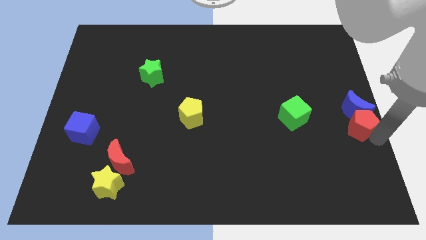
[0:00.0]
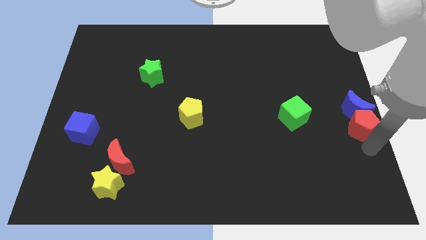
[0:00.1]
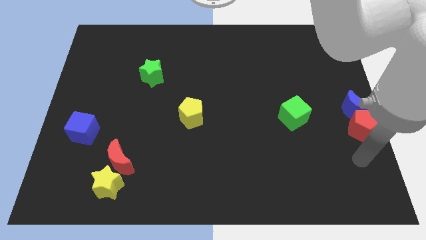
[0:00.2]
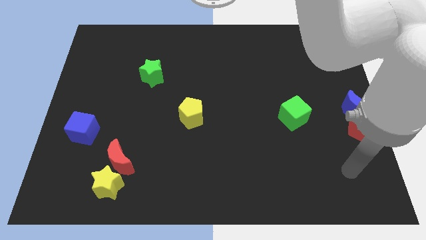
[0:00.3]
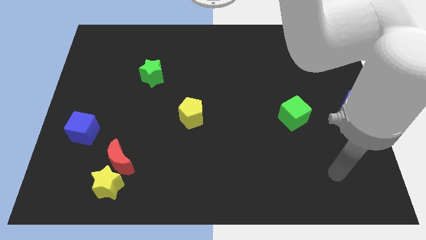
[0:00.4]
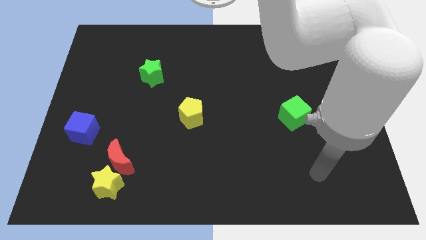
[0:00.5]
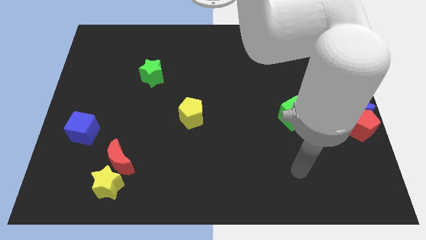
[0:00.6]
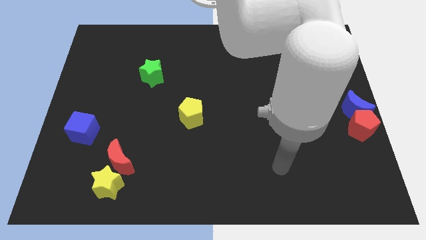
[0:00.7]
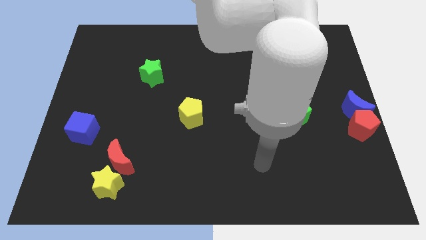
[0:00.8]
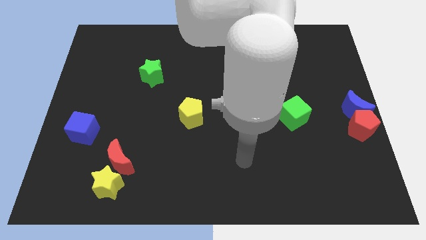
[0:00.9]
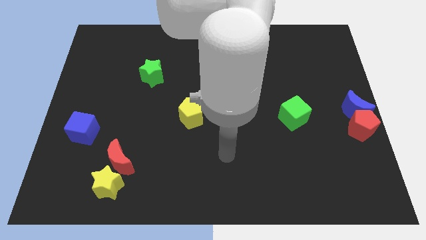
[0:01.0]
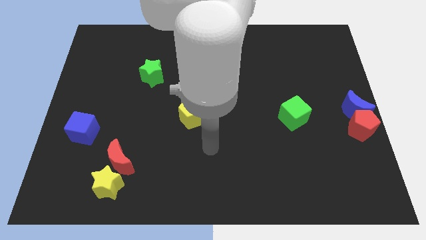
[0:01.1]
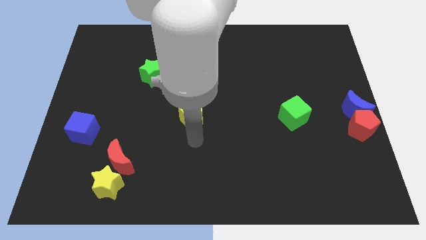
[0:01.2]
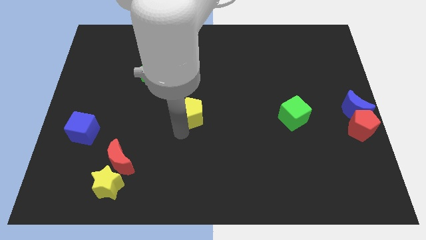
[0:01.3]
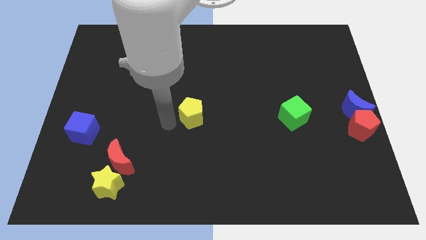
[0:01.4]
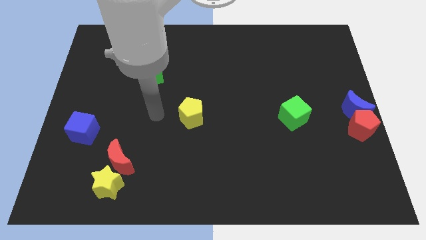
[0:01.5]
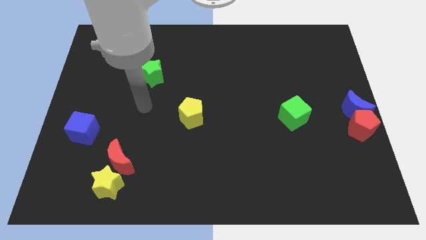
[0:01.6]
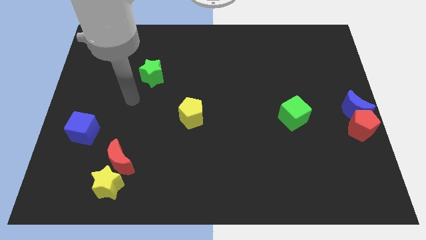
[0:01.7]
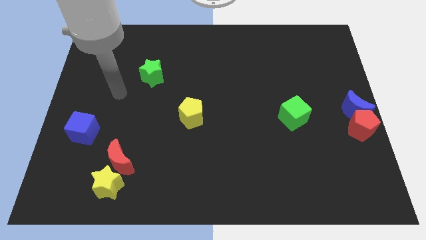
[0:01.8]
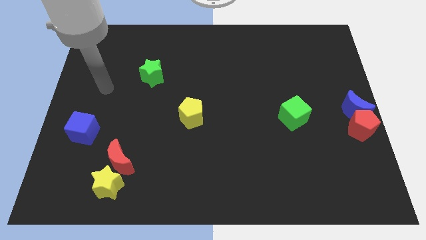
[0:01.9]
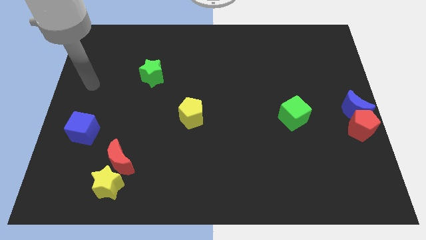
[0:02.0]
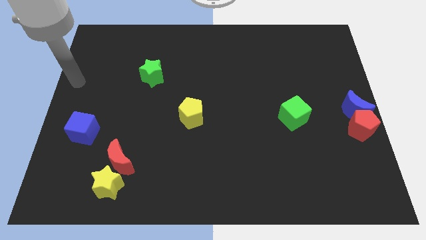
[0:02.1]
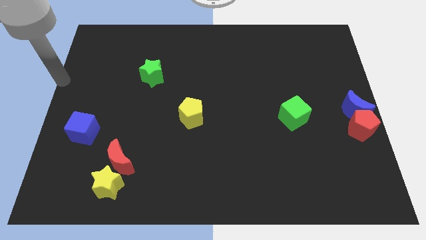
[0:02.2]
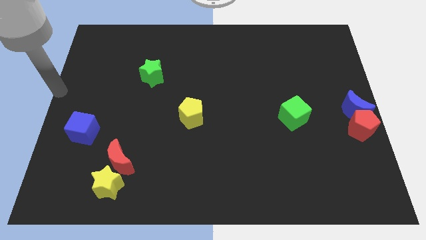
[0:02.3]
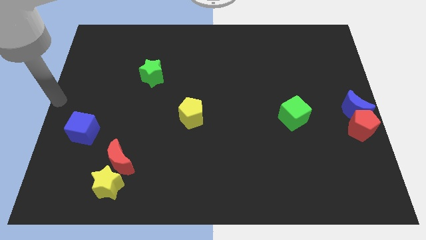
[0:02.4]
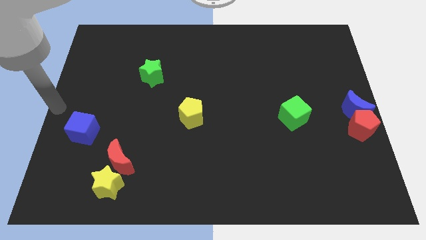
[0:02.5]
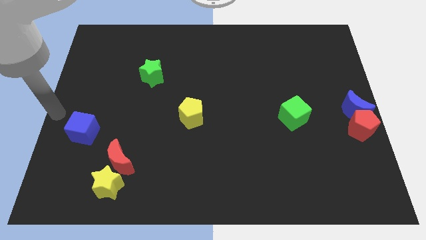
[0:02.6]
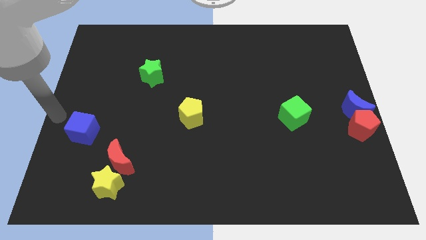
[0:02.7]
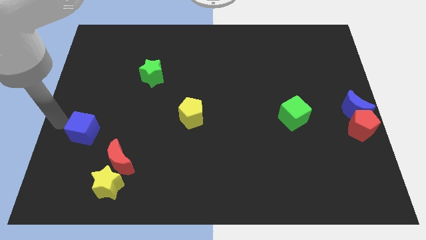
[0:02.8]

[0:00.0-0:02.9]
point the arm to the left of the blue cube

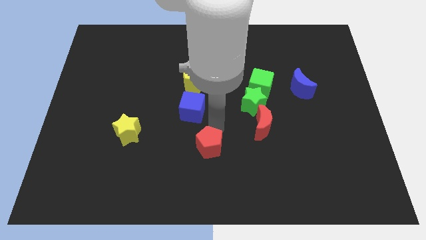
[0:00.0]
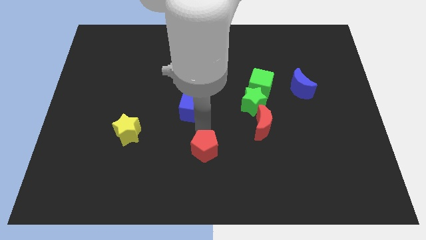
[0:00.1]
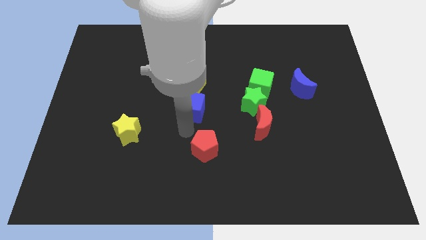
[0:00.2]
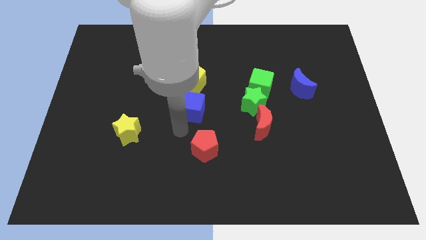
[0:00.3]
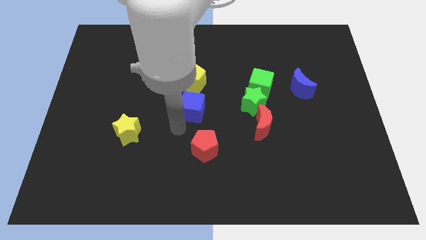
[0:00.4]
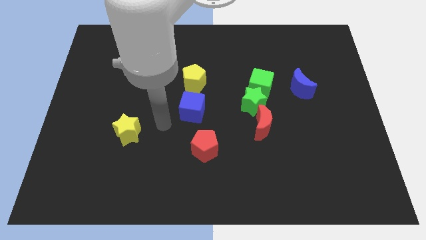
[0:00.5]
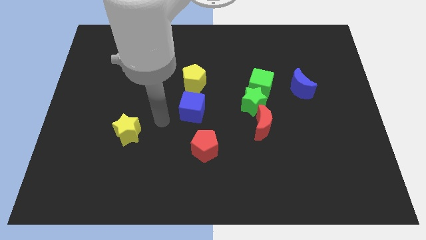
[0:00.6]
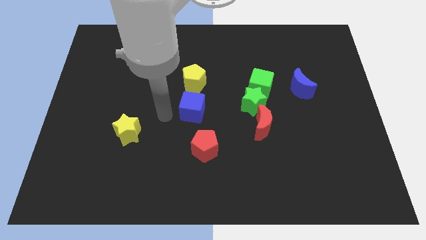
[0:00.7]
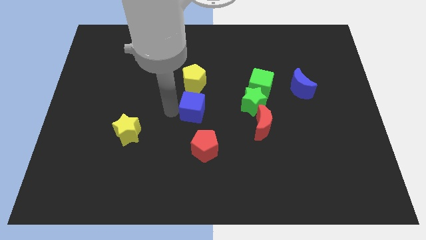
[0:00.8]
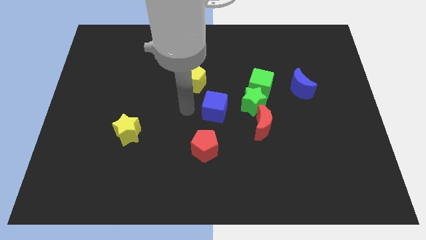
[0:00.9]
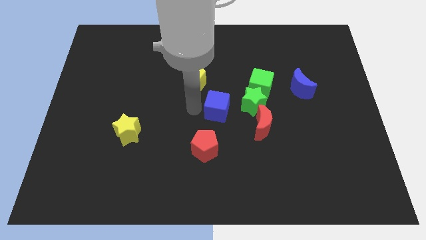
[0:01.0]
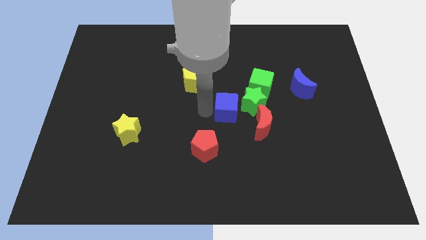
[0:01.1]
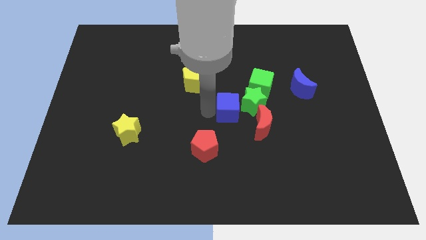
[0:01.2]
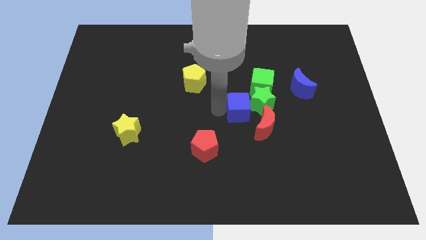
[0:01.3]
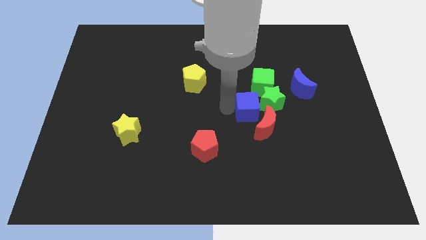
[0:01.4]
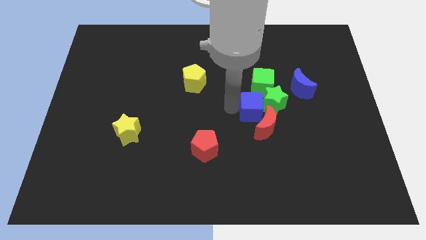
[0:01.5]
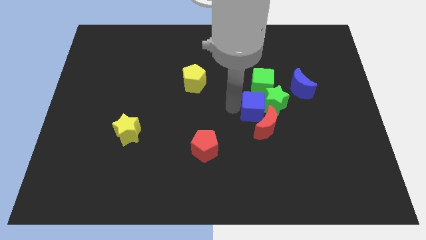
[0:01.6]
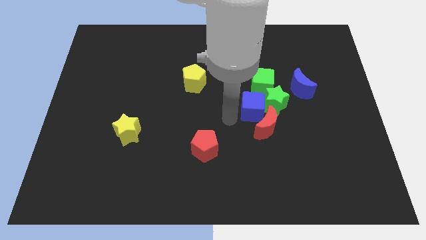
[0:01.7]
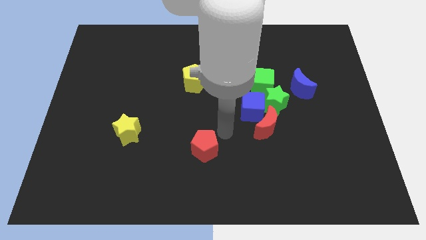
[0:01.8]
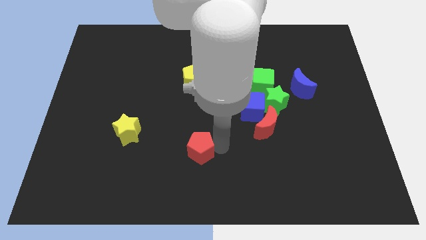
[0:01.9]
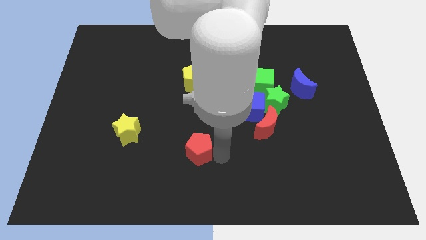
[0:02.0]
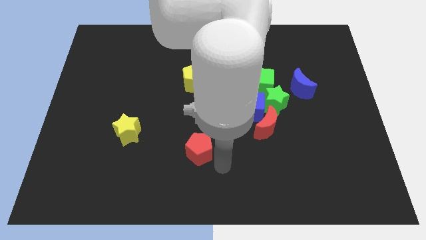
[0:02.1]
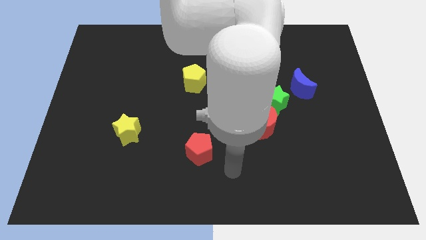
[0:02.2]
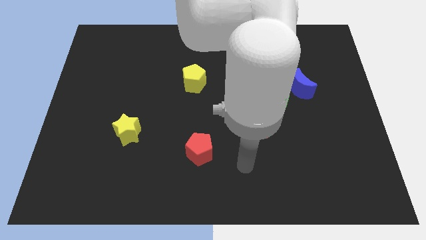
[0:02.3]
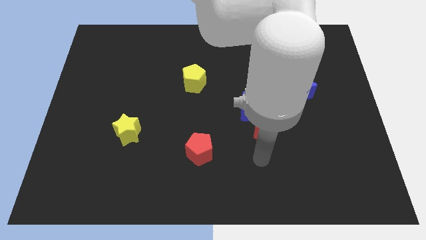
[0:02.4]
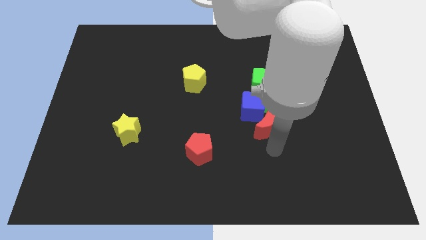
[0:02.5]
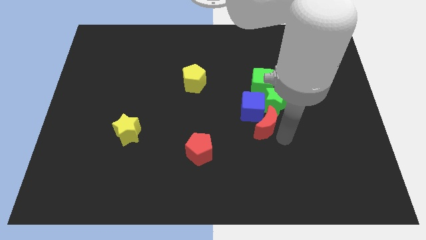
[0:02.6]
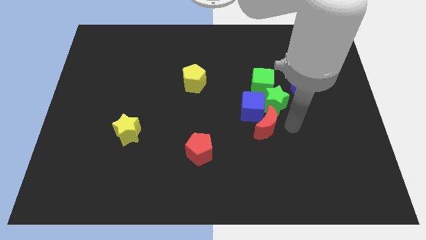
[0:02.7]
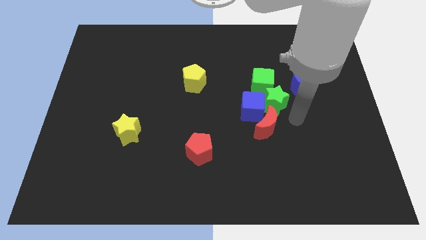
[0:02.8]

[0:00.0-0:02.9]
push the blue cube into the group of blocks

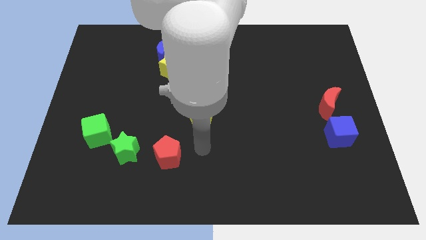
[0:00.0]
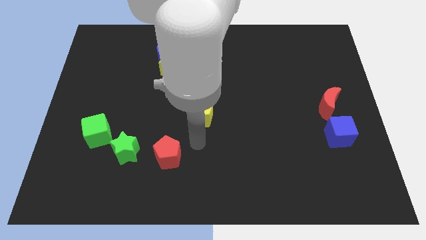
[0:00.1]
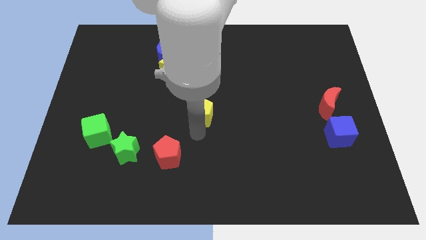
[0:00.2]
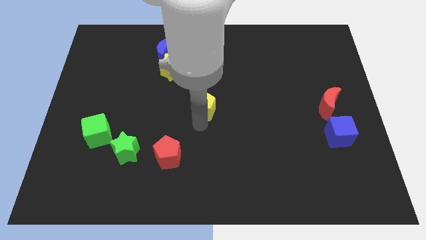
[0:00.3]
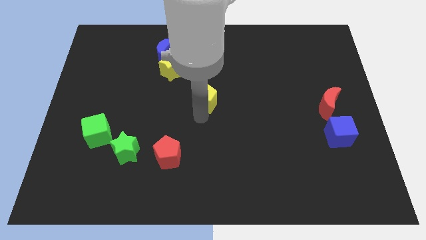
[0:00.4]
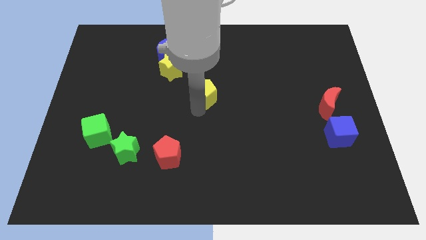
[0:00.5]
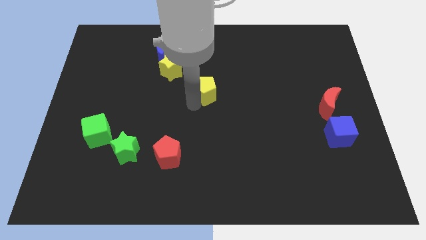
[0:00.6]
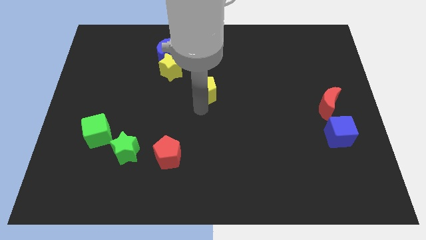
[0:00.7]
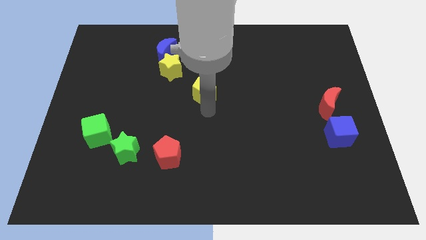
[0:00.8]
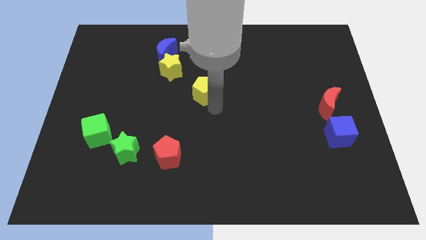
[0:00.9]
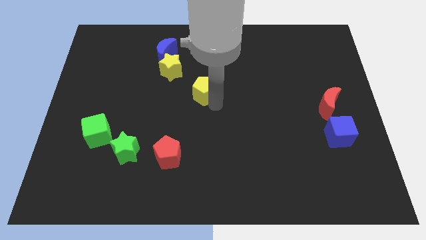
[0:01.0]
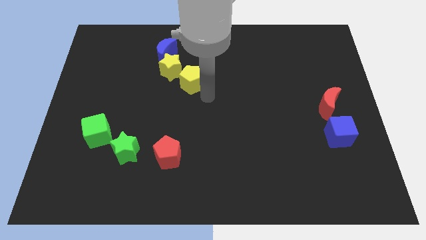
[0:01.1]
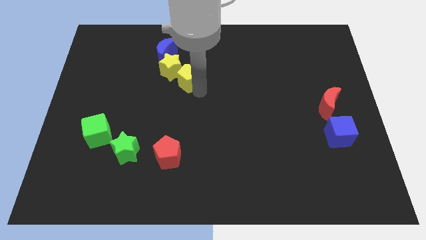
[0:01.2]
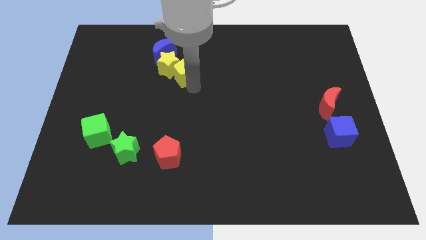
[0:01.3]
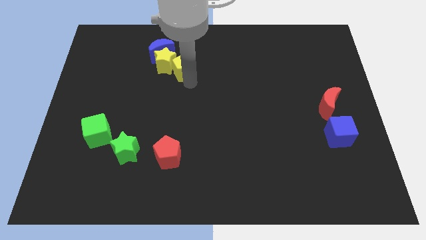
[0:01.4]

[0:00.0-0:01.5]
attach the yellow pentagon to the yellow star

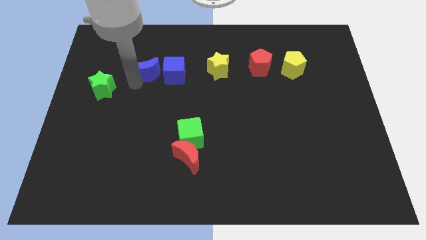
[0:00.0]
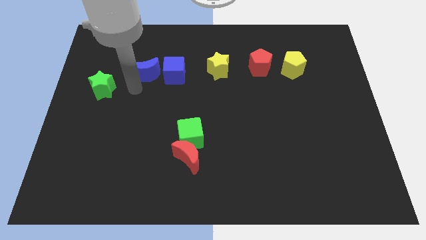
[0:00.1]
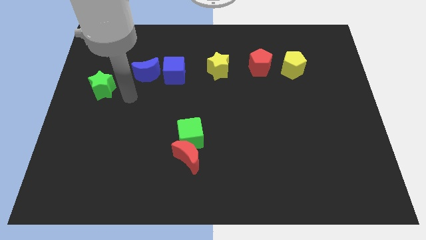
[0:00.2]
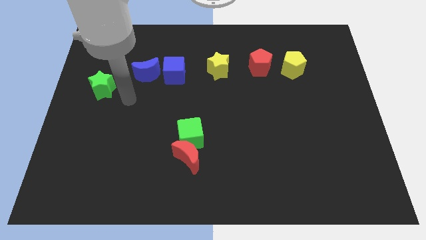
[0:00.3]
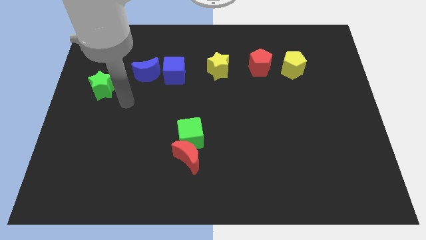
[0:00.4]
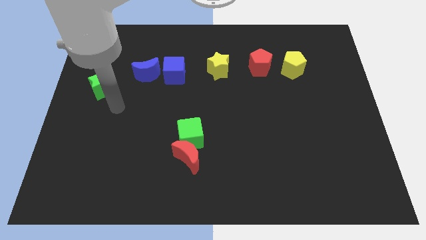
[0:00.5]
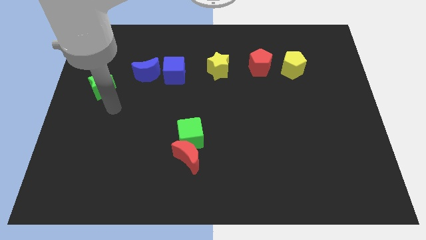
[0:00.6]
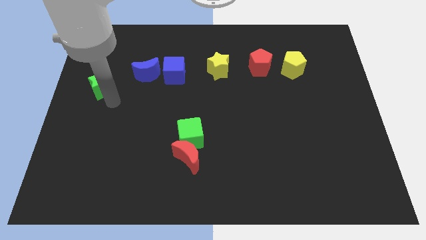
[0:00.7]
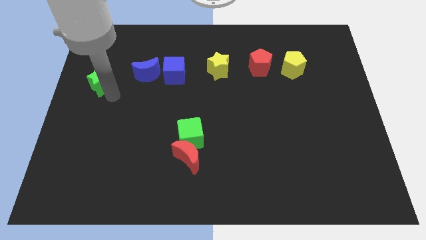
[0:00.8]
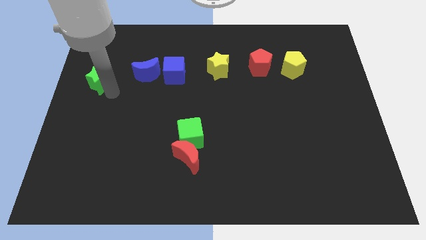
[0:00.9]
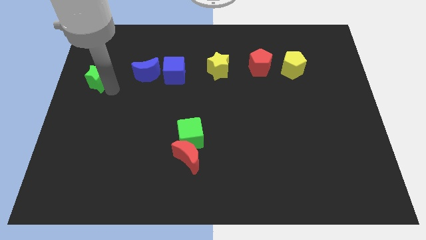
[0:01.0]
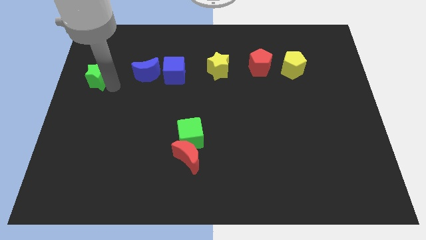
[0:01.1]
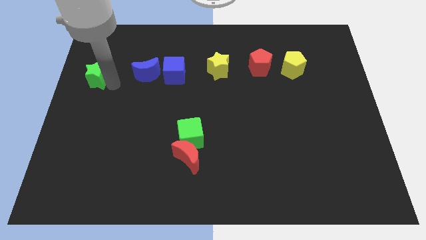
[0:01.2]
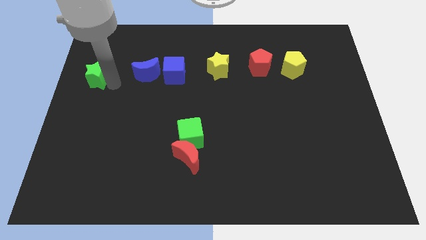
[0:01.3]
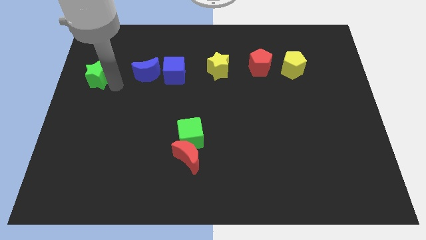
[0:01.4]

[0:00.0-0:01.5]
drag the green star to the left side of the blue moon

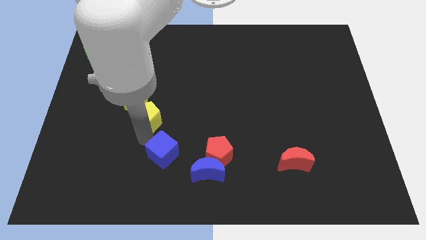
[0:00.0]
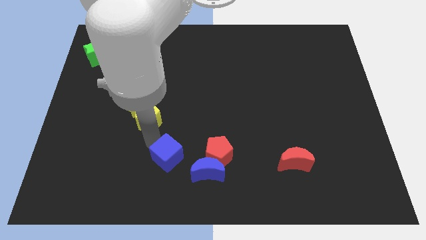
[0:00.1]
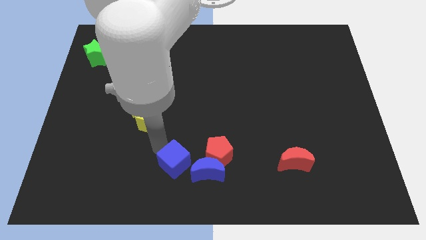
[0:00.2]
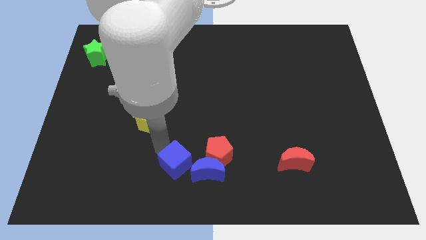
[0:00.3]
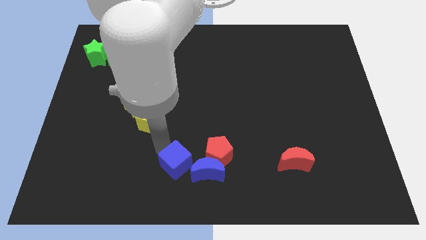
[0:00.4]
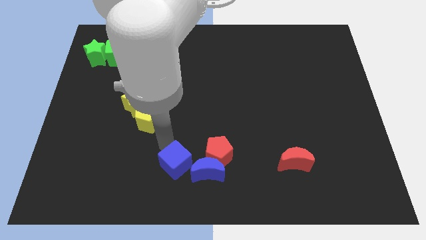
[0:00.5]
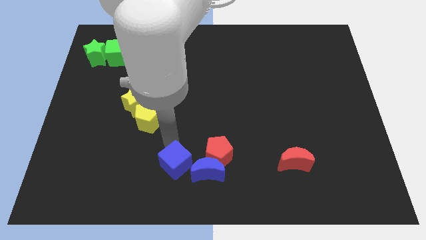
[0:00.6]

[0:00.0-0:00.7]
push the blue cube left to the blue crescent
